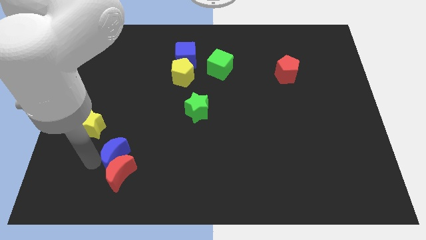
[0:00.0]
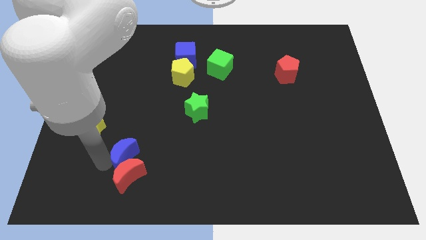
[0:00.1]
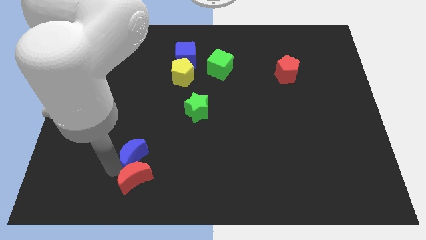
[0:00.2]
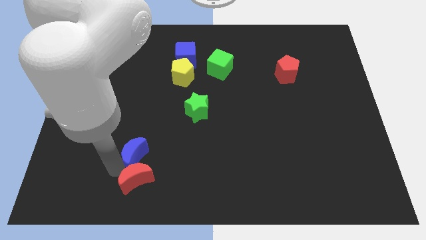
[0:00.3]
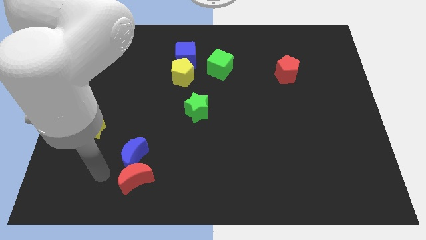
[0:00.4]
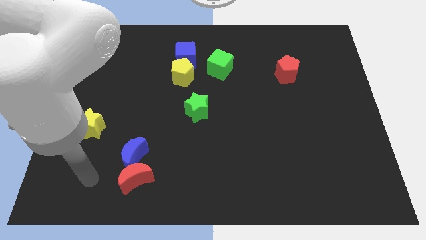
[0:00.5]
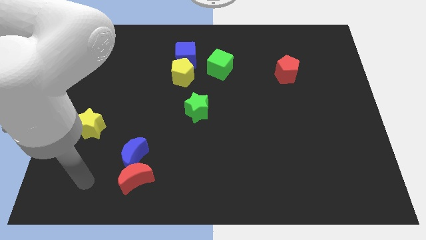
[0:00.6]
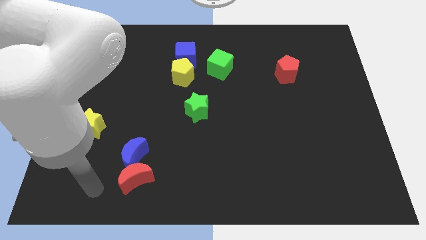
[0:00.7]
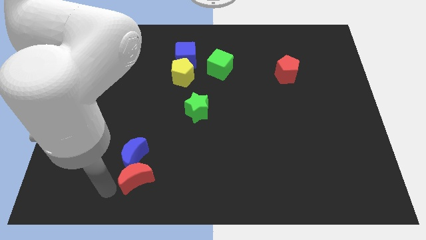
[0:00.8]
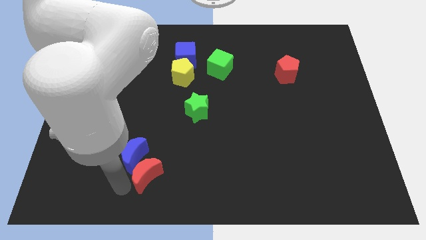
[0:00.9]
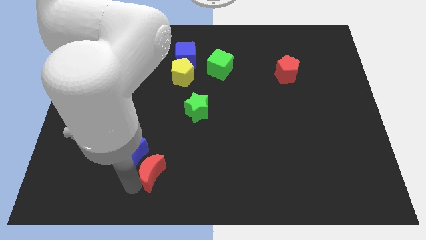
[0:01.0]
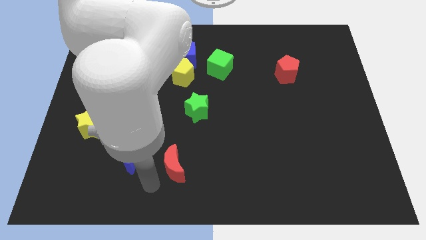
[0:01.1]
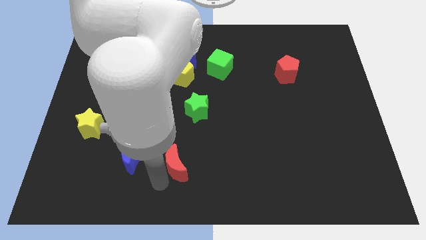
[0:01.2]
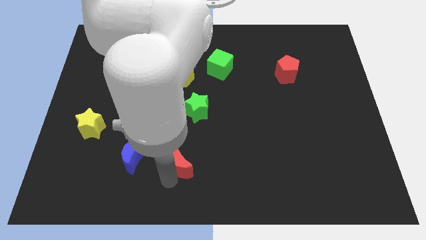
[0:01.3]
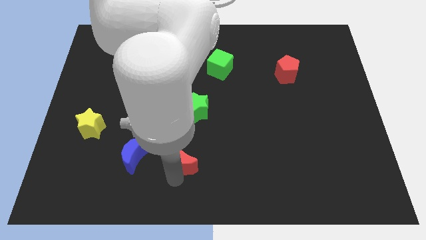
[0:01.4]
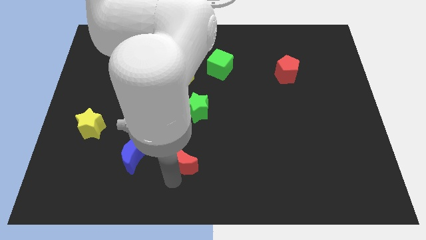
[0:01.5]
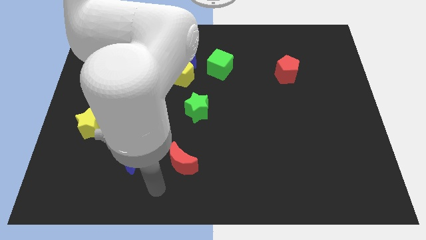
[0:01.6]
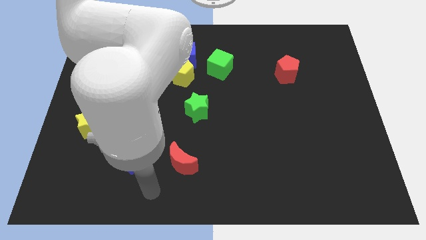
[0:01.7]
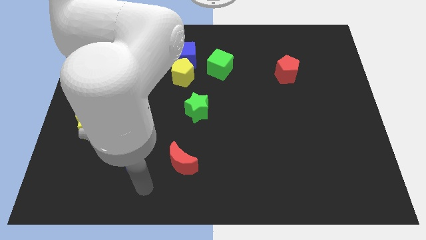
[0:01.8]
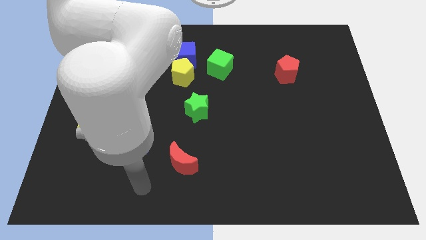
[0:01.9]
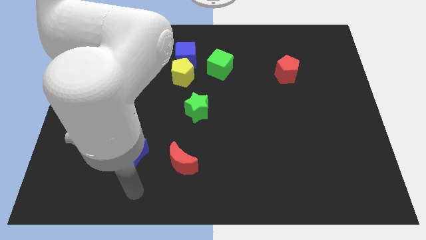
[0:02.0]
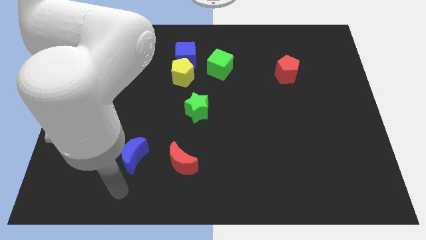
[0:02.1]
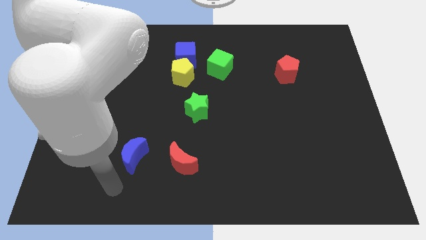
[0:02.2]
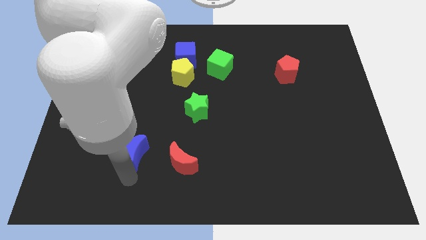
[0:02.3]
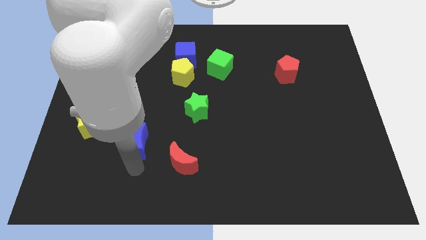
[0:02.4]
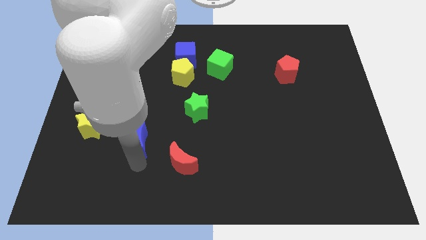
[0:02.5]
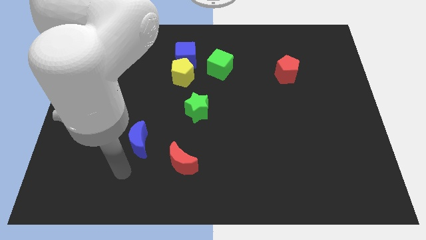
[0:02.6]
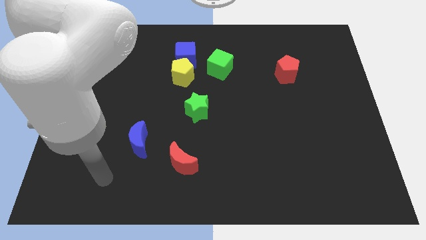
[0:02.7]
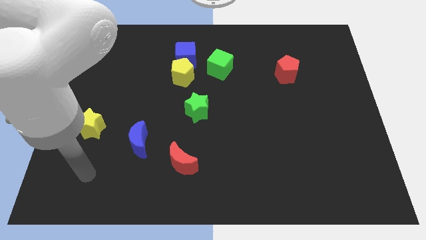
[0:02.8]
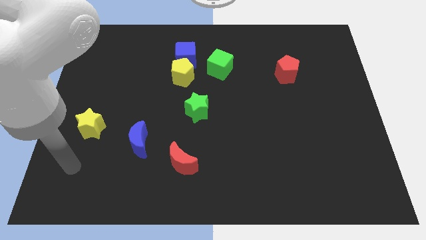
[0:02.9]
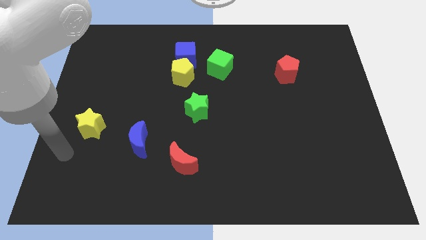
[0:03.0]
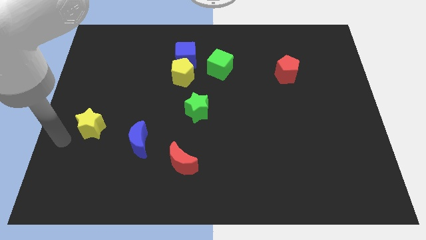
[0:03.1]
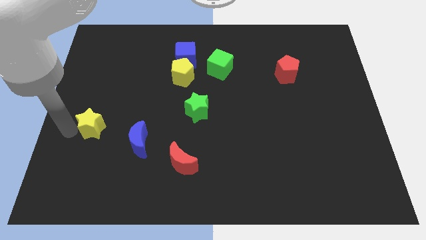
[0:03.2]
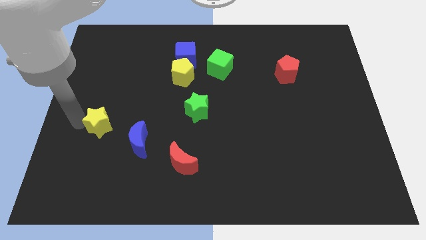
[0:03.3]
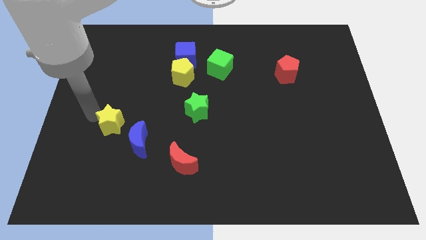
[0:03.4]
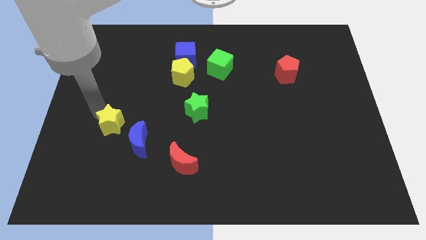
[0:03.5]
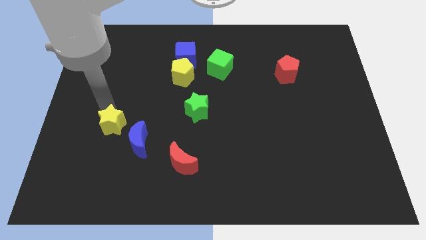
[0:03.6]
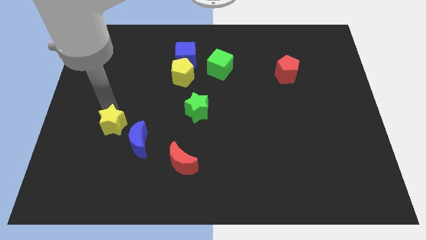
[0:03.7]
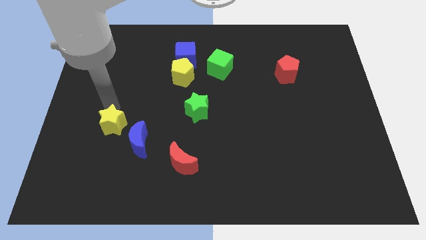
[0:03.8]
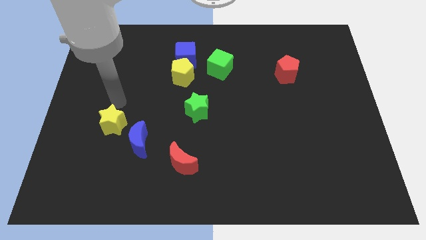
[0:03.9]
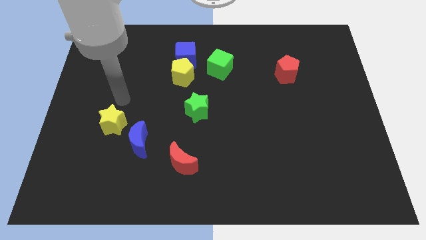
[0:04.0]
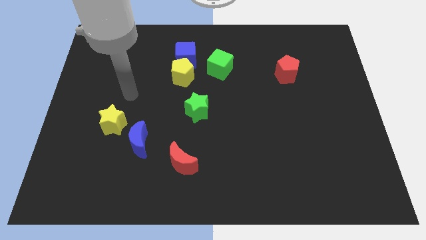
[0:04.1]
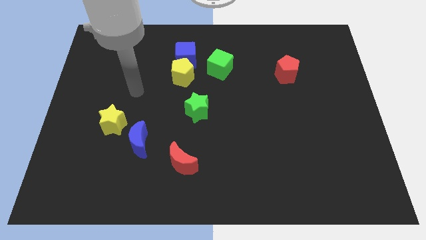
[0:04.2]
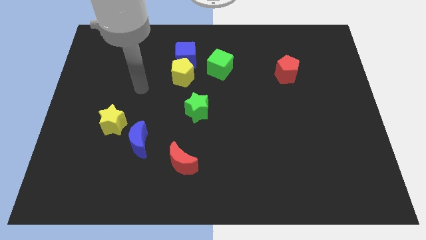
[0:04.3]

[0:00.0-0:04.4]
place the yellow star blue moon and red moon in diagonal position

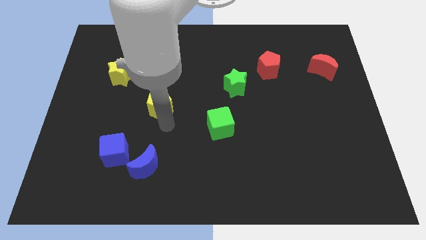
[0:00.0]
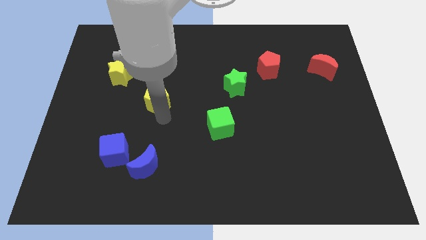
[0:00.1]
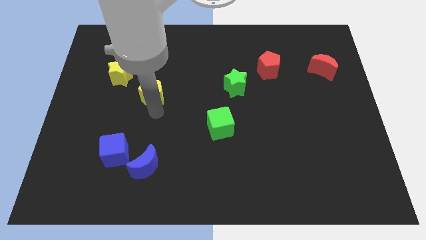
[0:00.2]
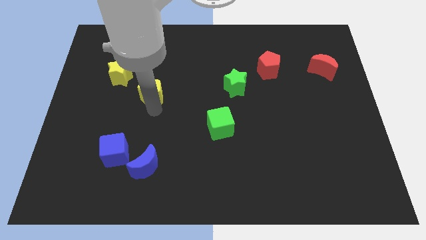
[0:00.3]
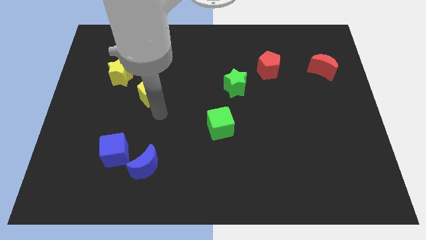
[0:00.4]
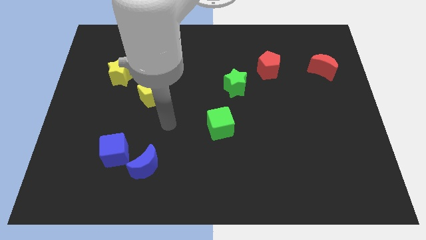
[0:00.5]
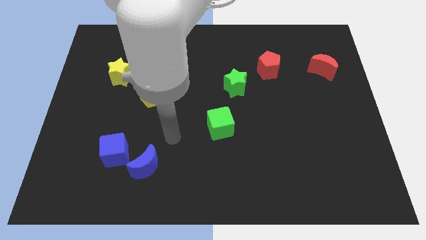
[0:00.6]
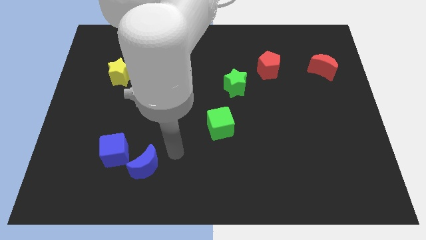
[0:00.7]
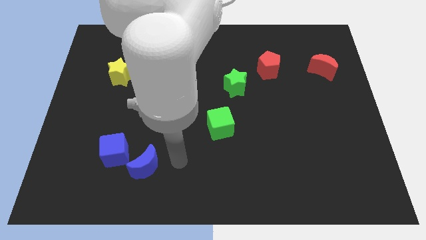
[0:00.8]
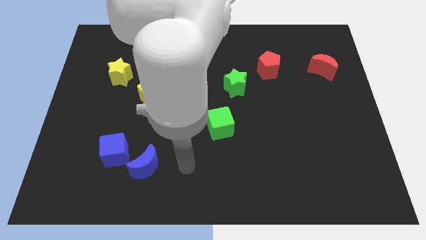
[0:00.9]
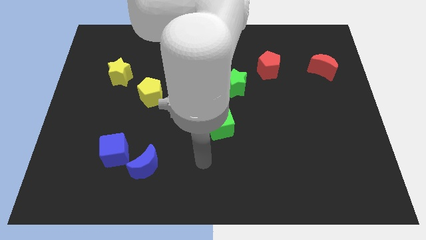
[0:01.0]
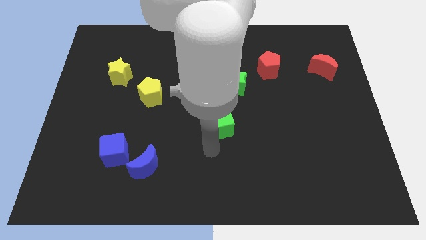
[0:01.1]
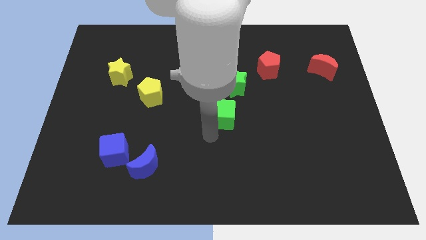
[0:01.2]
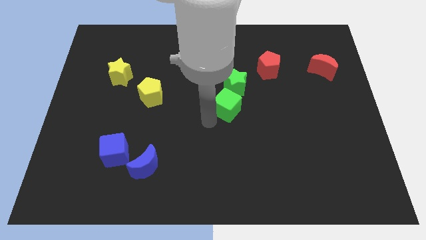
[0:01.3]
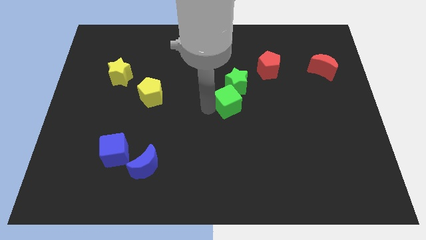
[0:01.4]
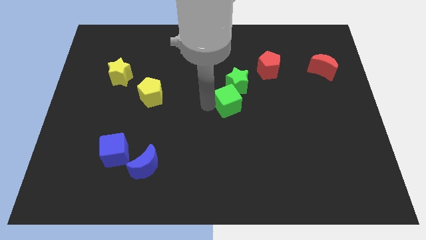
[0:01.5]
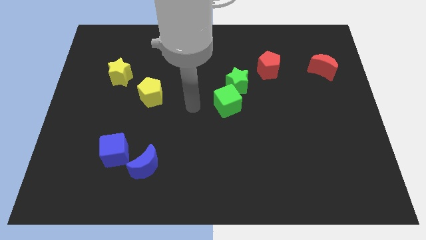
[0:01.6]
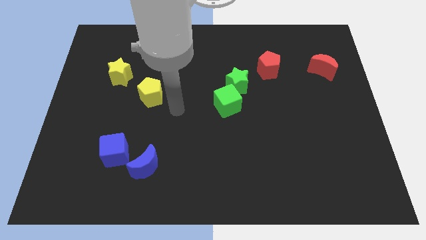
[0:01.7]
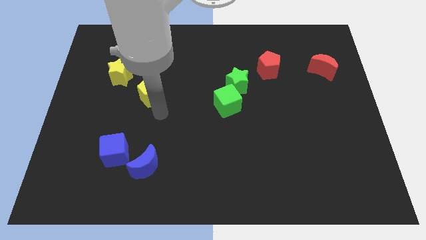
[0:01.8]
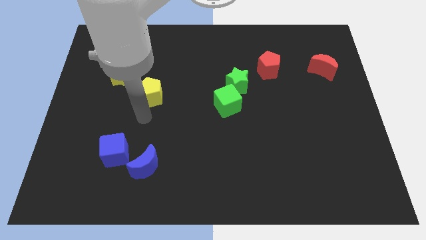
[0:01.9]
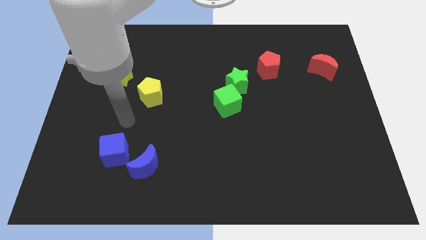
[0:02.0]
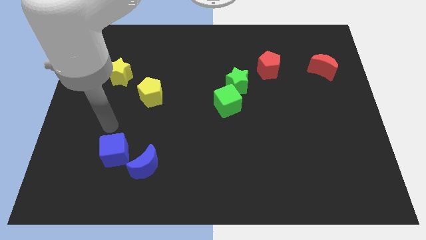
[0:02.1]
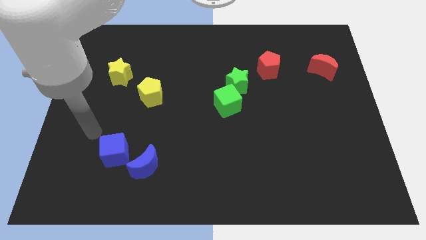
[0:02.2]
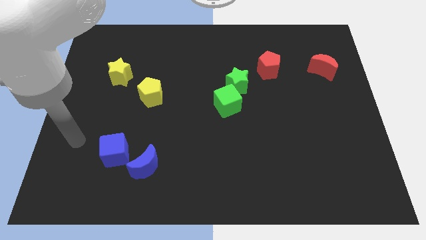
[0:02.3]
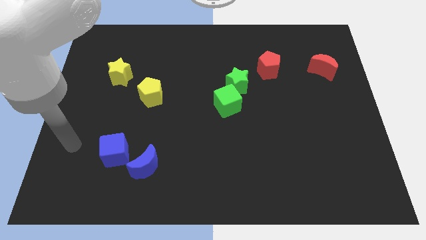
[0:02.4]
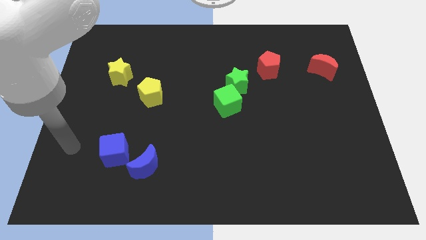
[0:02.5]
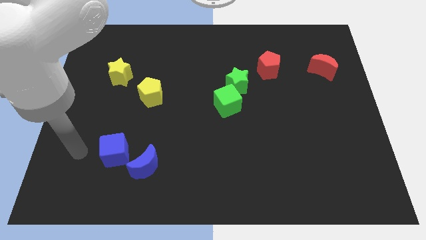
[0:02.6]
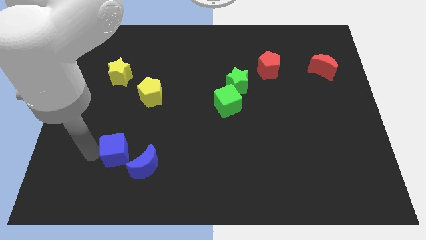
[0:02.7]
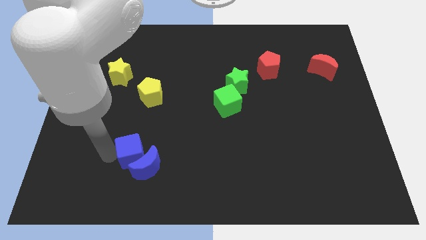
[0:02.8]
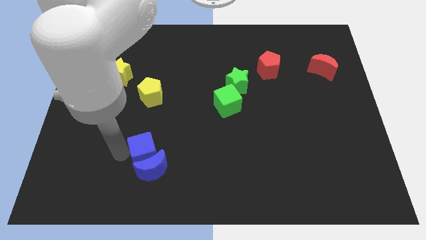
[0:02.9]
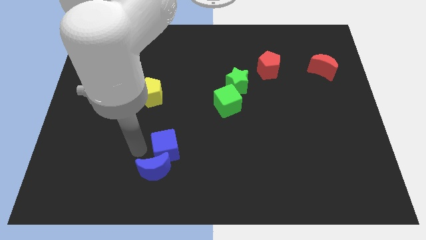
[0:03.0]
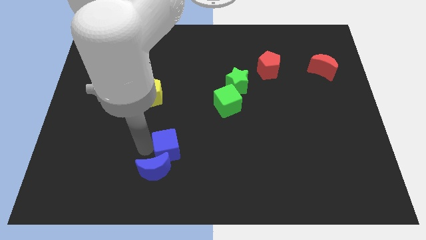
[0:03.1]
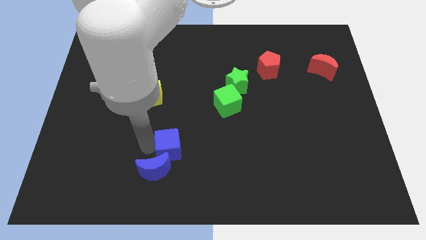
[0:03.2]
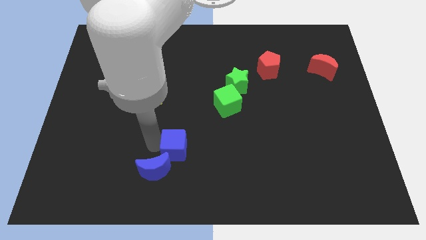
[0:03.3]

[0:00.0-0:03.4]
move the blue cube towards right

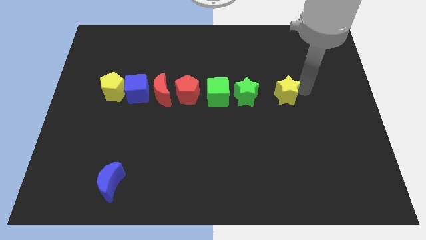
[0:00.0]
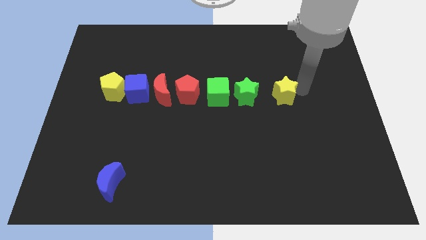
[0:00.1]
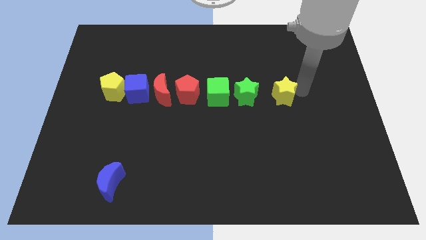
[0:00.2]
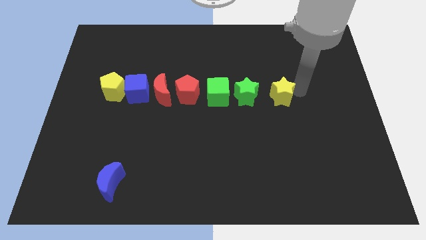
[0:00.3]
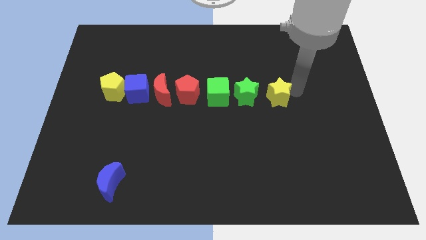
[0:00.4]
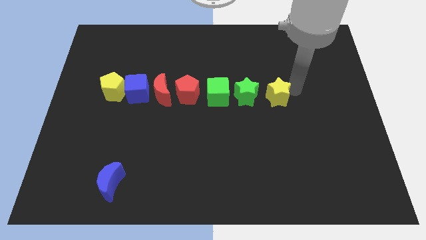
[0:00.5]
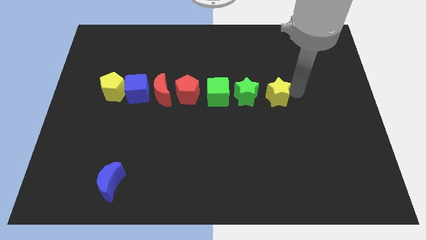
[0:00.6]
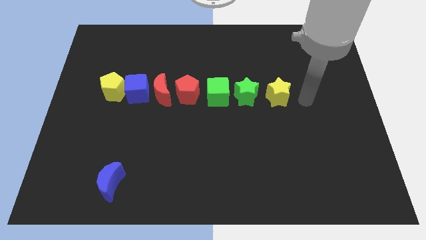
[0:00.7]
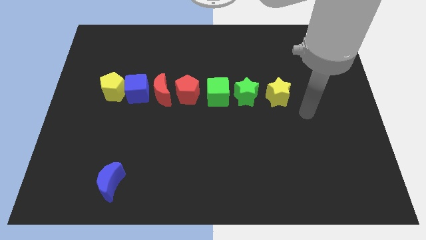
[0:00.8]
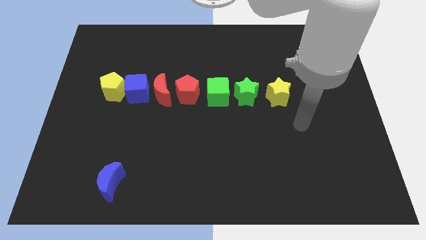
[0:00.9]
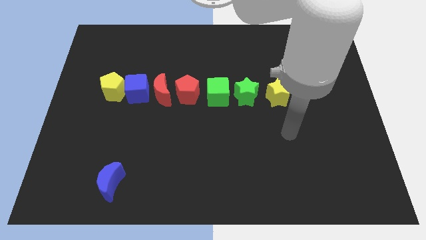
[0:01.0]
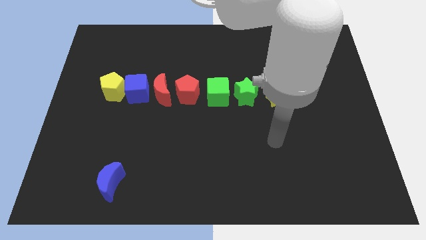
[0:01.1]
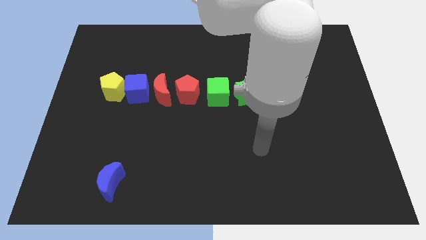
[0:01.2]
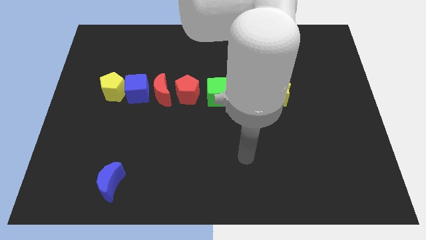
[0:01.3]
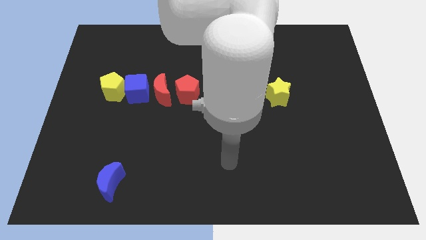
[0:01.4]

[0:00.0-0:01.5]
place the yellow star to the right of the green star
